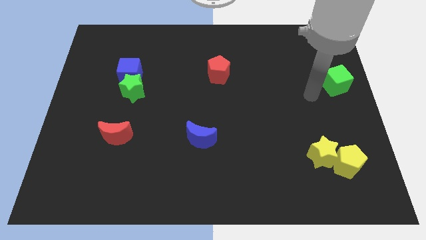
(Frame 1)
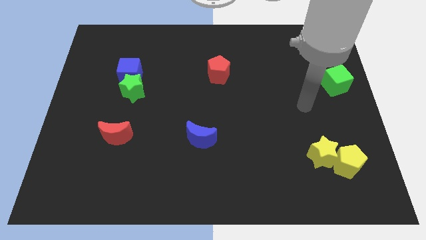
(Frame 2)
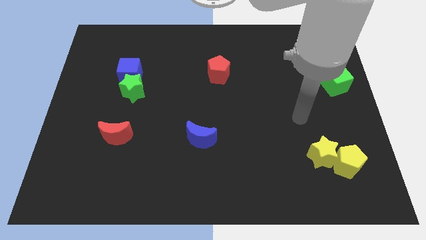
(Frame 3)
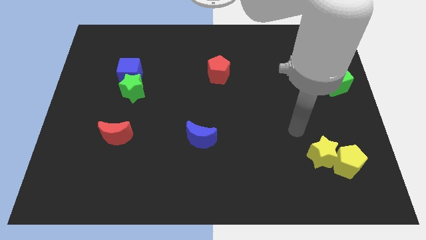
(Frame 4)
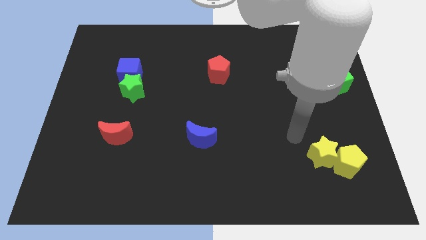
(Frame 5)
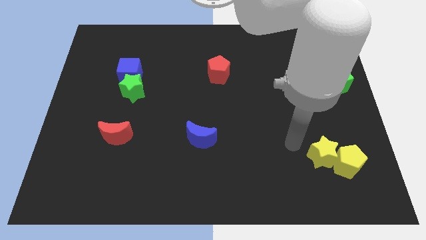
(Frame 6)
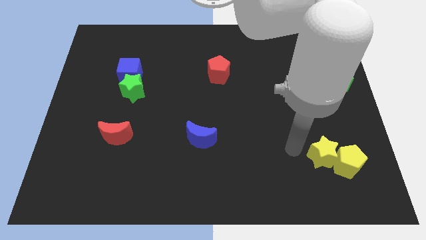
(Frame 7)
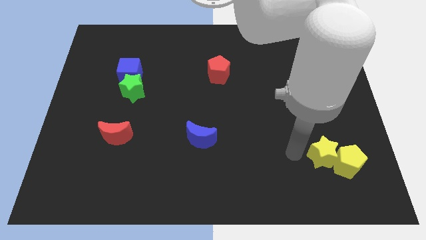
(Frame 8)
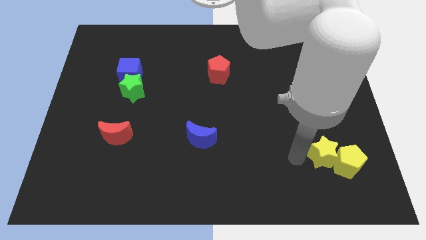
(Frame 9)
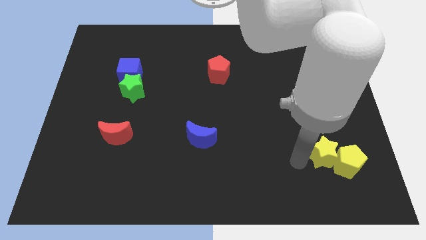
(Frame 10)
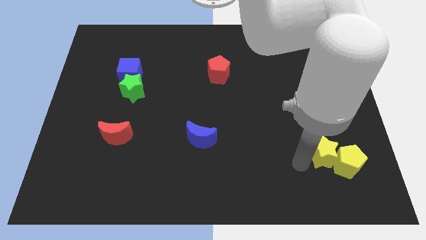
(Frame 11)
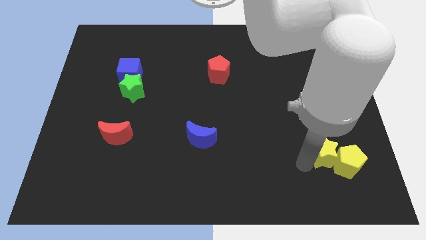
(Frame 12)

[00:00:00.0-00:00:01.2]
move the arm away from the green cube

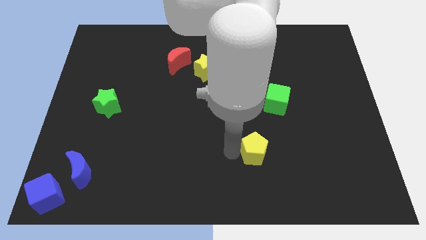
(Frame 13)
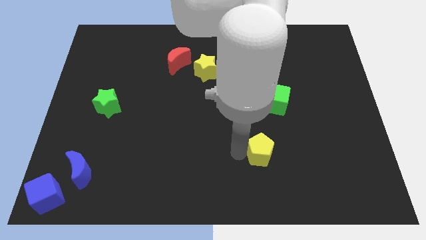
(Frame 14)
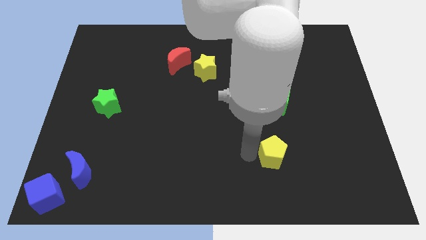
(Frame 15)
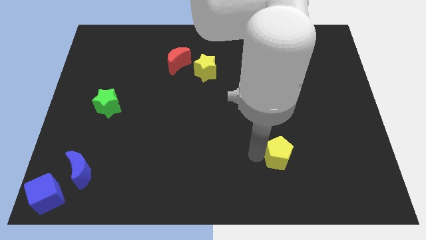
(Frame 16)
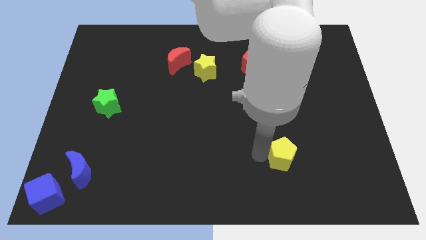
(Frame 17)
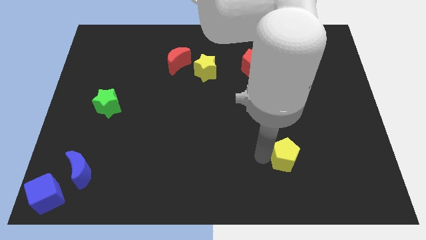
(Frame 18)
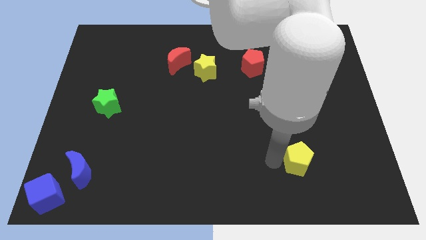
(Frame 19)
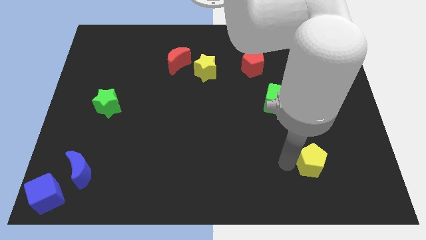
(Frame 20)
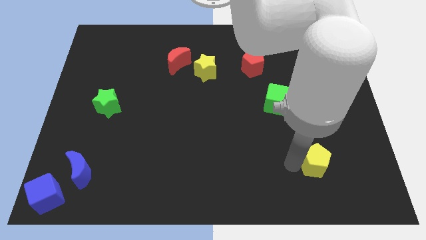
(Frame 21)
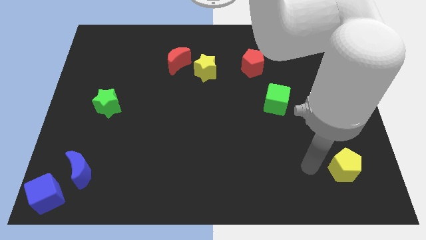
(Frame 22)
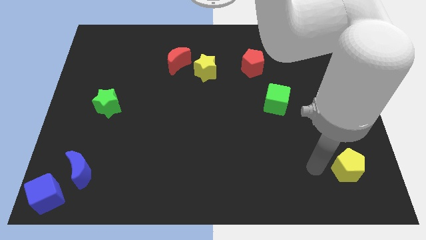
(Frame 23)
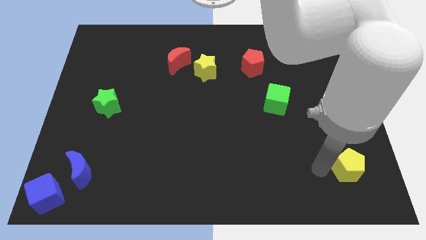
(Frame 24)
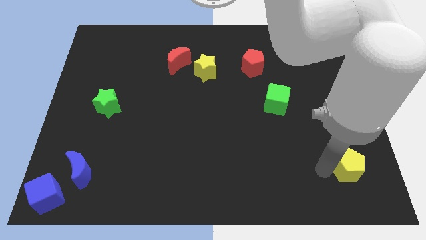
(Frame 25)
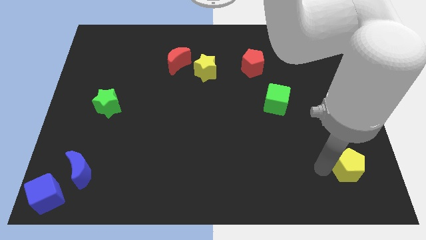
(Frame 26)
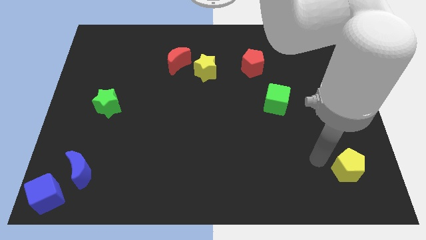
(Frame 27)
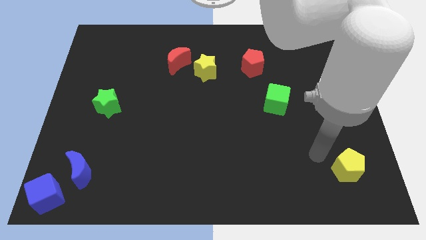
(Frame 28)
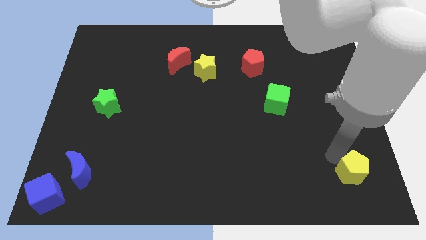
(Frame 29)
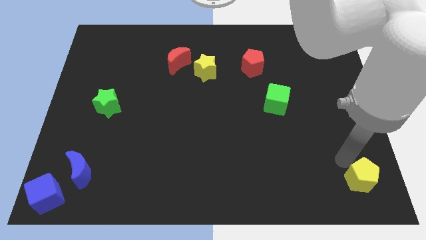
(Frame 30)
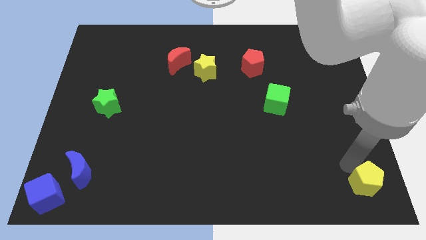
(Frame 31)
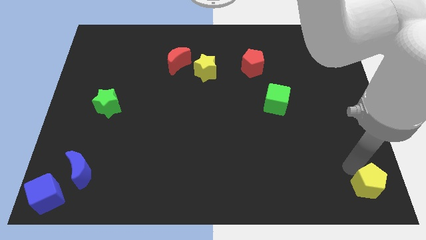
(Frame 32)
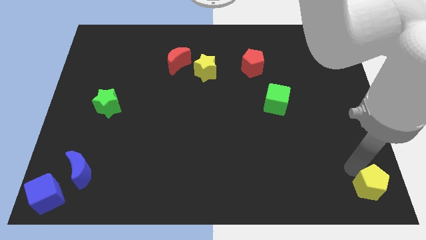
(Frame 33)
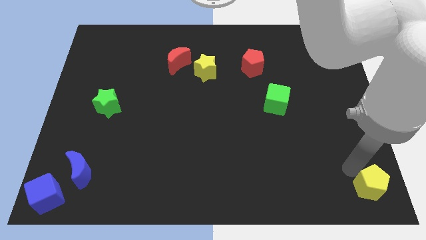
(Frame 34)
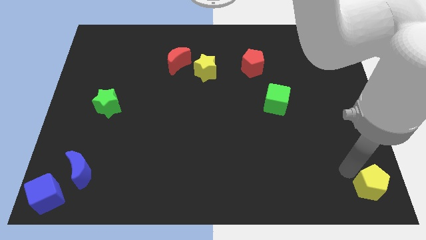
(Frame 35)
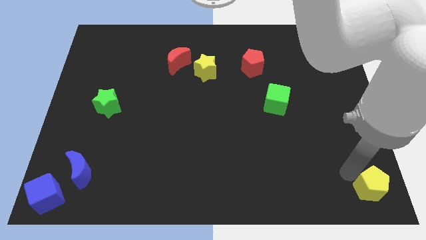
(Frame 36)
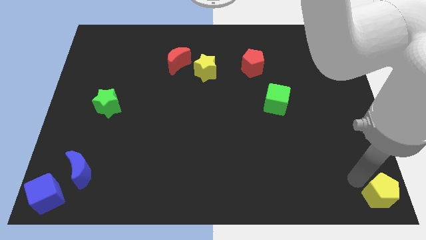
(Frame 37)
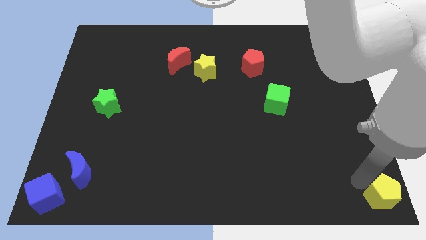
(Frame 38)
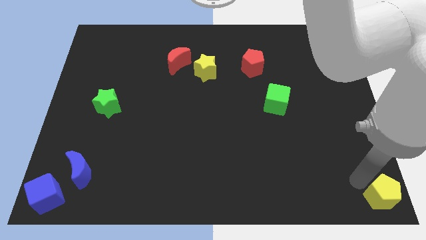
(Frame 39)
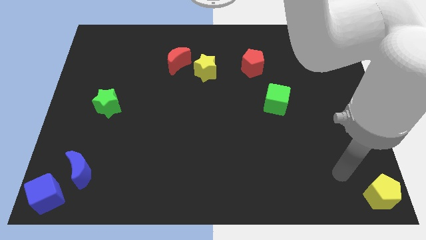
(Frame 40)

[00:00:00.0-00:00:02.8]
move the yellow pentagon to the bottom right of the board

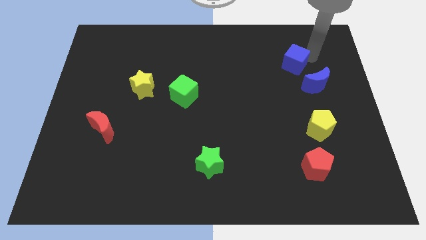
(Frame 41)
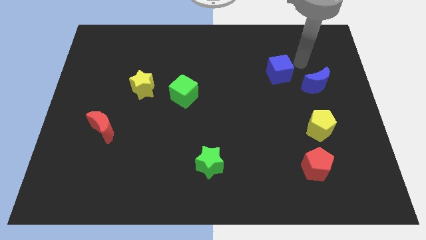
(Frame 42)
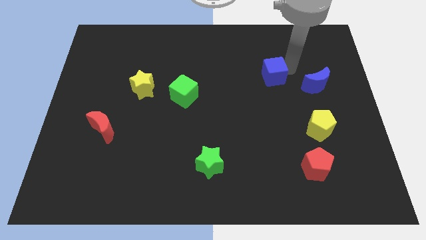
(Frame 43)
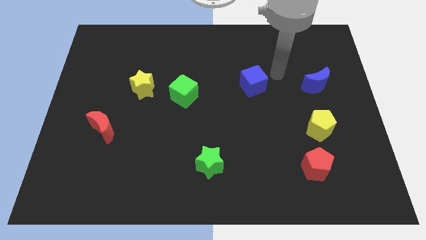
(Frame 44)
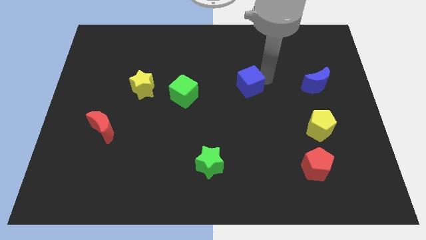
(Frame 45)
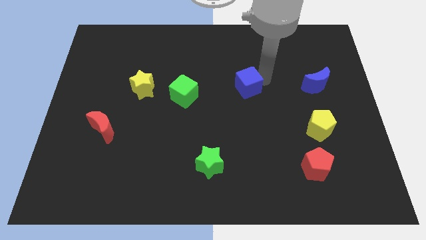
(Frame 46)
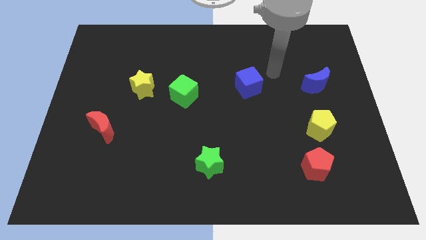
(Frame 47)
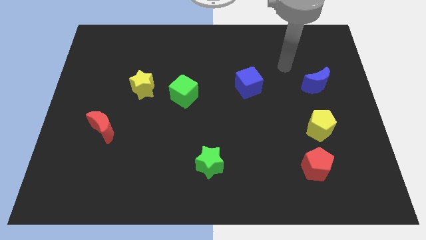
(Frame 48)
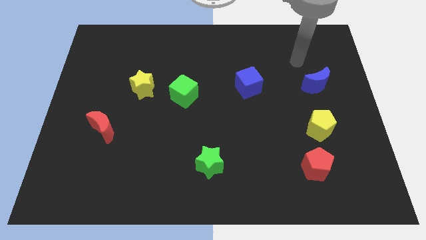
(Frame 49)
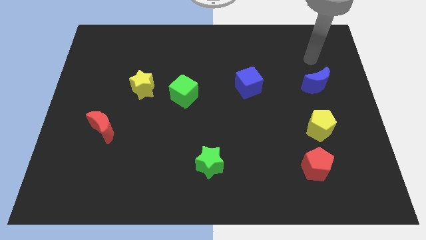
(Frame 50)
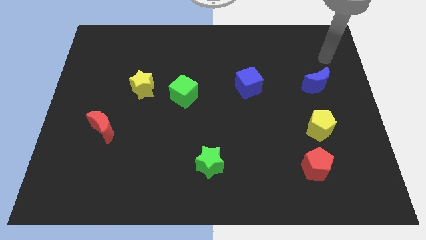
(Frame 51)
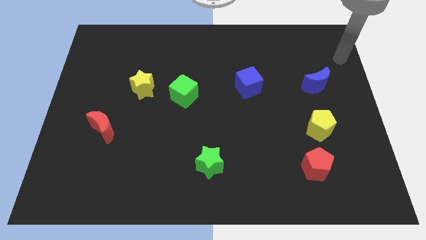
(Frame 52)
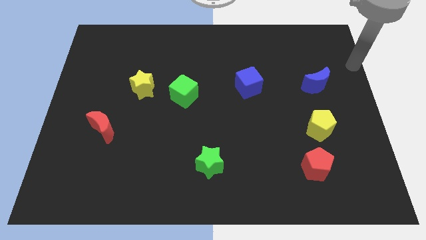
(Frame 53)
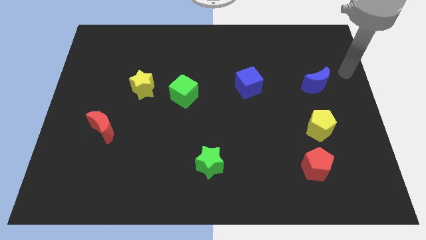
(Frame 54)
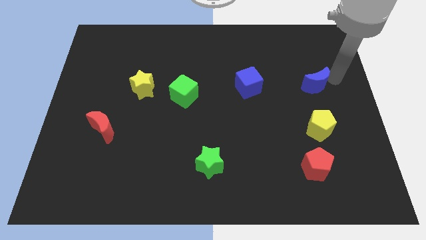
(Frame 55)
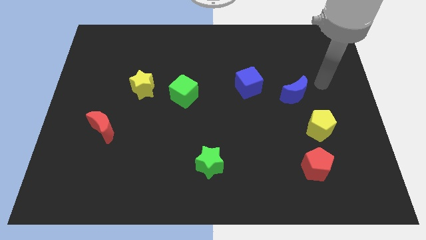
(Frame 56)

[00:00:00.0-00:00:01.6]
place the blue cube between the blue moon and green cube

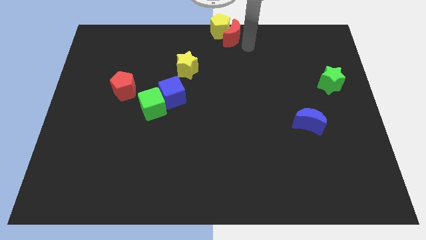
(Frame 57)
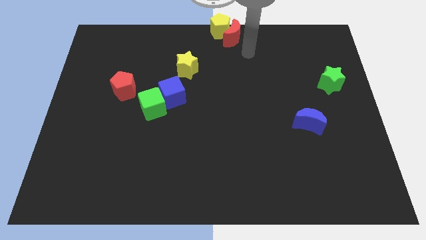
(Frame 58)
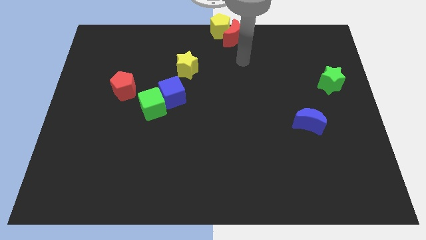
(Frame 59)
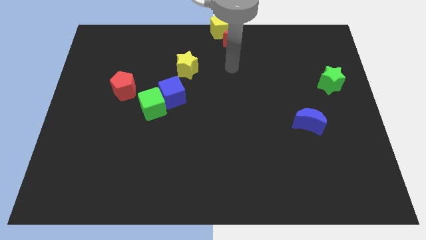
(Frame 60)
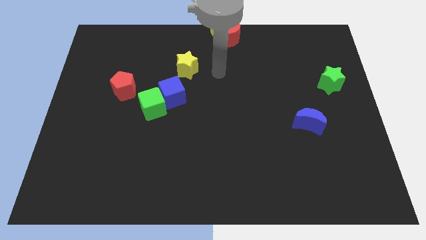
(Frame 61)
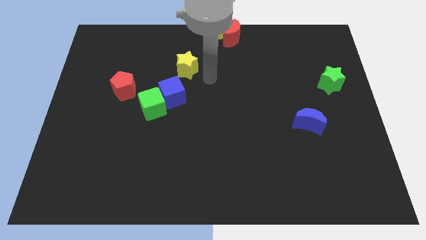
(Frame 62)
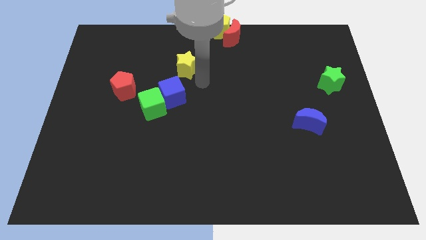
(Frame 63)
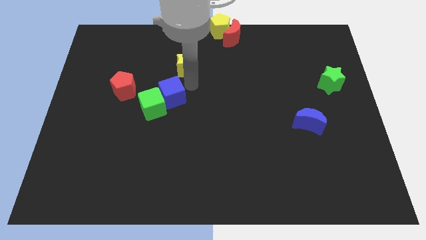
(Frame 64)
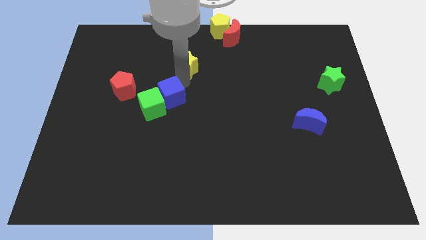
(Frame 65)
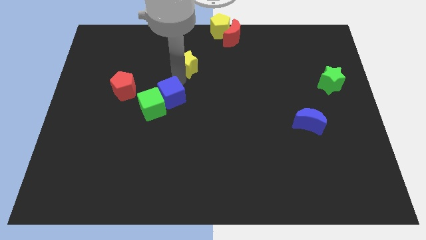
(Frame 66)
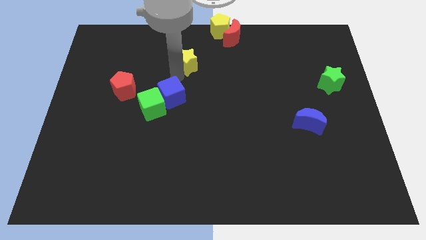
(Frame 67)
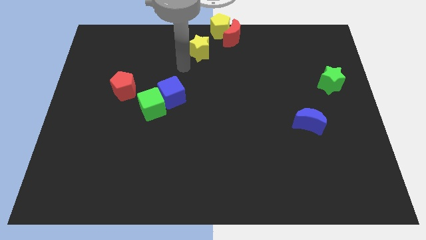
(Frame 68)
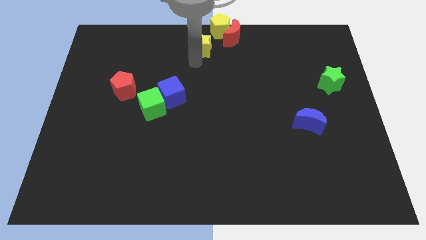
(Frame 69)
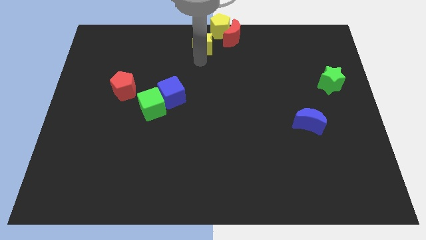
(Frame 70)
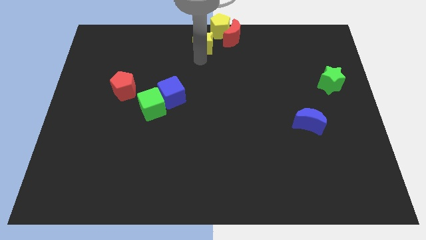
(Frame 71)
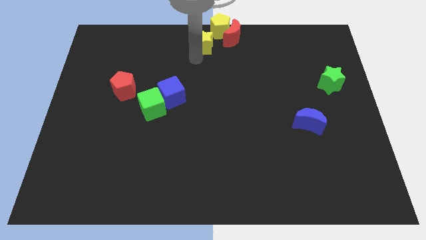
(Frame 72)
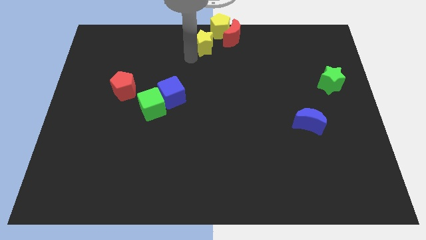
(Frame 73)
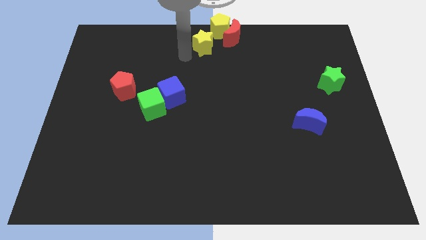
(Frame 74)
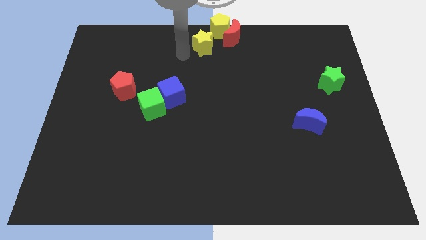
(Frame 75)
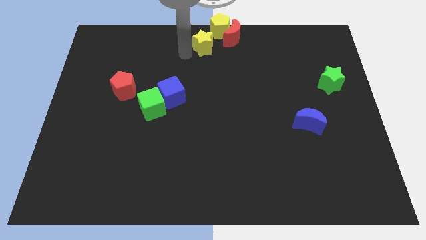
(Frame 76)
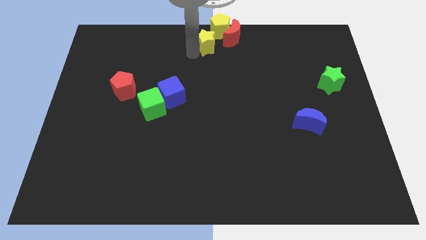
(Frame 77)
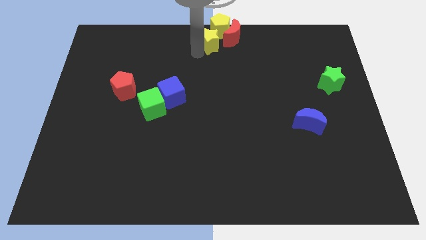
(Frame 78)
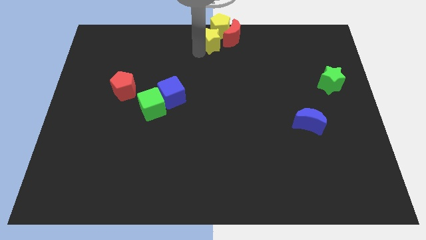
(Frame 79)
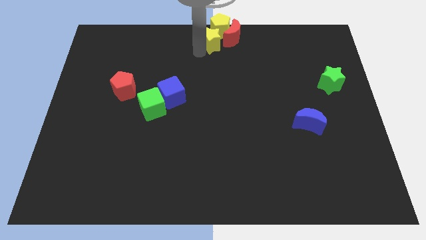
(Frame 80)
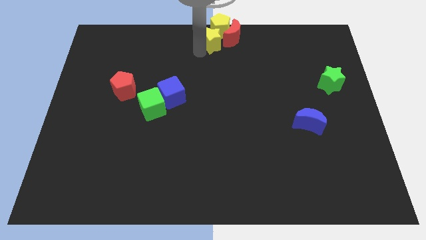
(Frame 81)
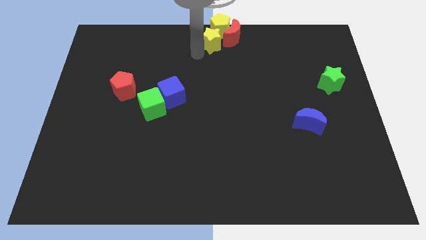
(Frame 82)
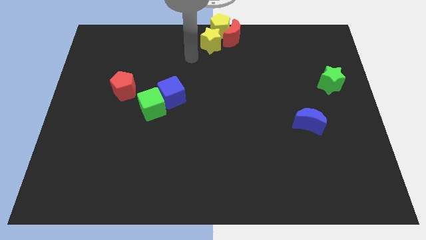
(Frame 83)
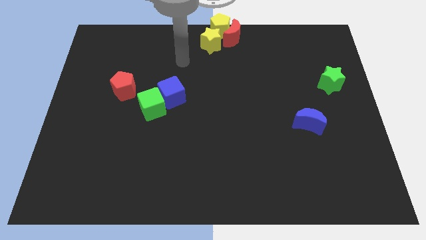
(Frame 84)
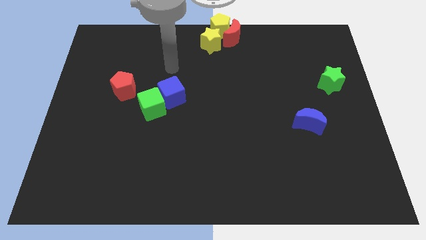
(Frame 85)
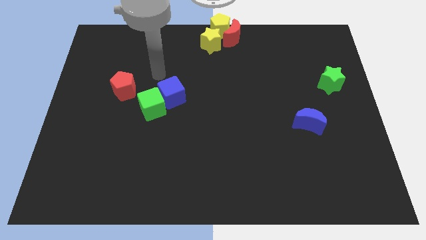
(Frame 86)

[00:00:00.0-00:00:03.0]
move the yellow star slightly bottom left of the yellow pentagon

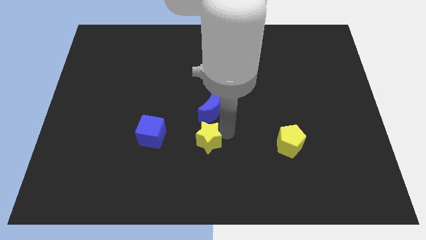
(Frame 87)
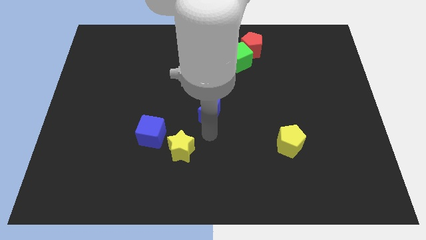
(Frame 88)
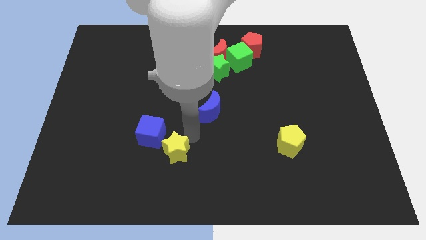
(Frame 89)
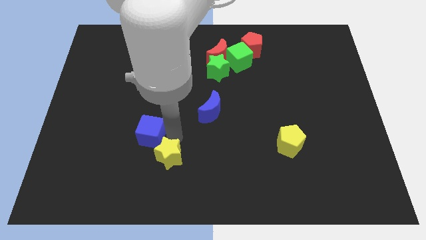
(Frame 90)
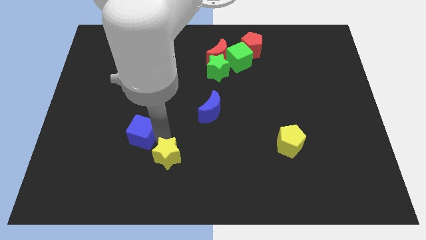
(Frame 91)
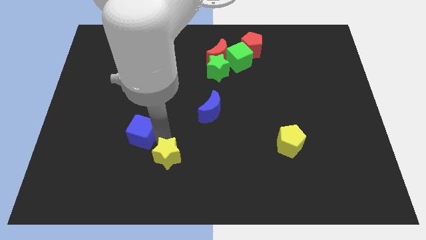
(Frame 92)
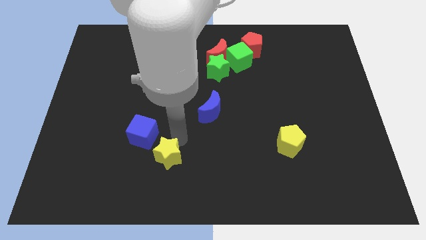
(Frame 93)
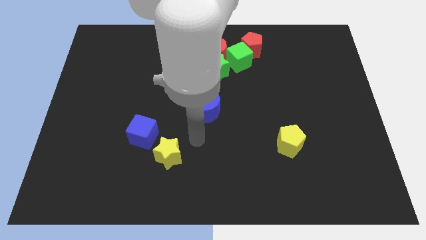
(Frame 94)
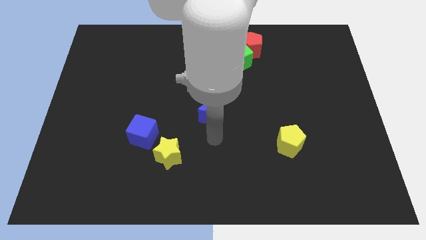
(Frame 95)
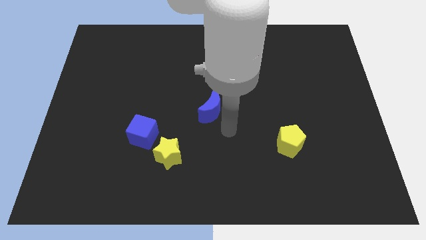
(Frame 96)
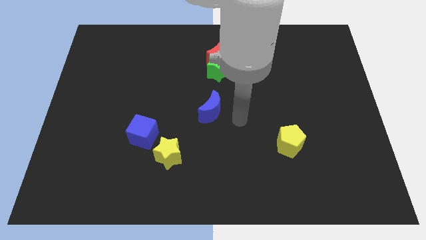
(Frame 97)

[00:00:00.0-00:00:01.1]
push yellow star to the right of the blue cube
